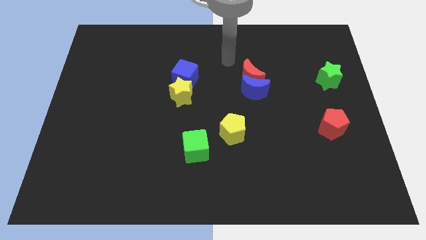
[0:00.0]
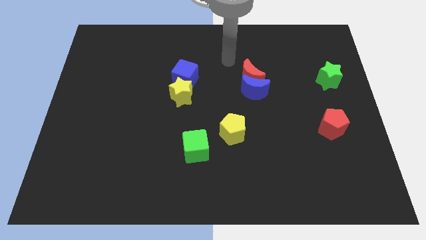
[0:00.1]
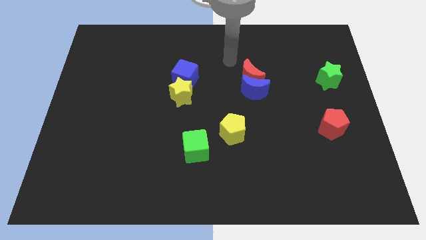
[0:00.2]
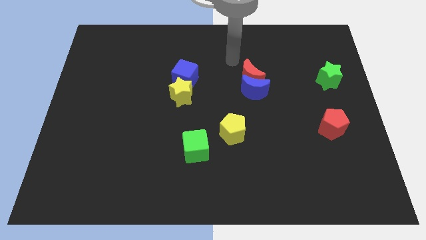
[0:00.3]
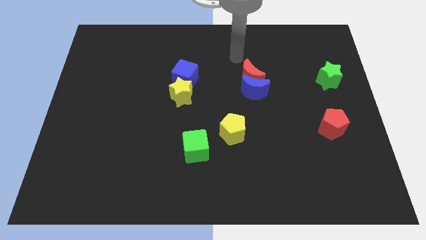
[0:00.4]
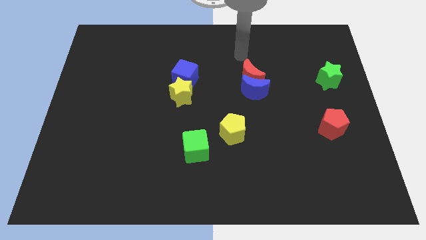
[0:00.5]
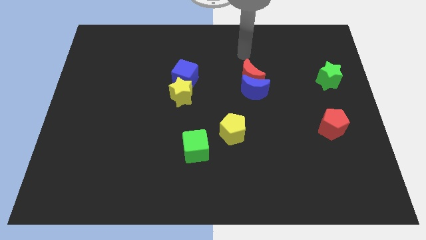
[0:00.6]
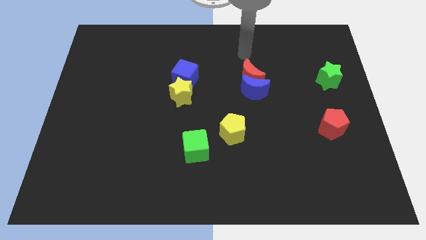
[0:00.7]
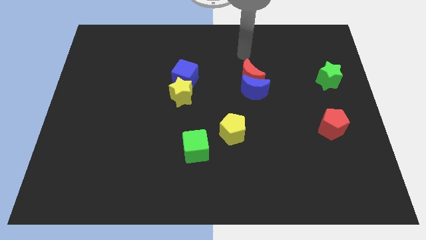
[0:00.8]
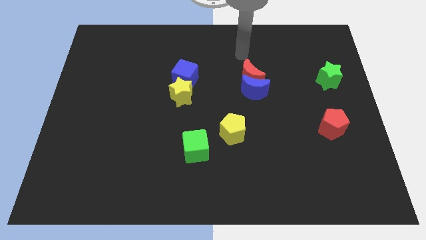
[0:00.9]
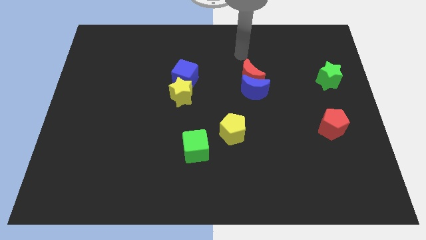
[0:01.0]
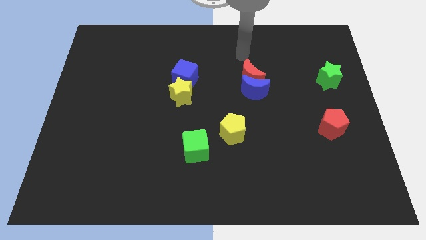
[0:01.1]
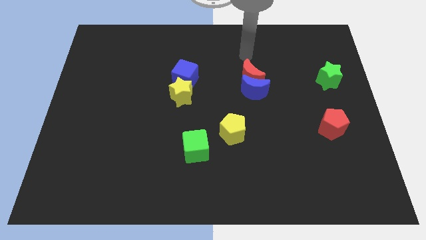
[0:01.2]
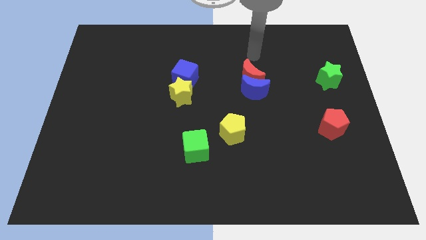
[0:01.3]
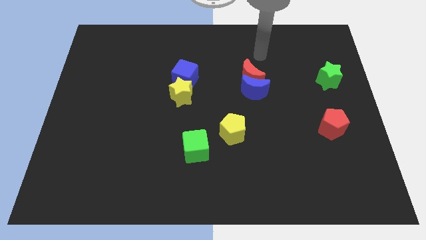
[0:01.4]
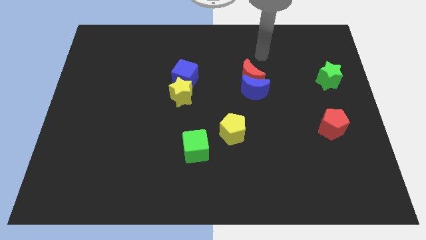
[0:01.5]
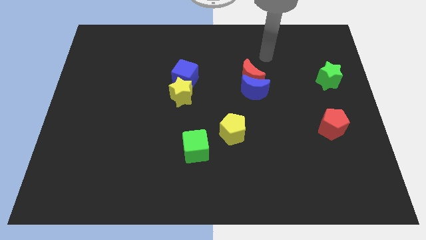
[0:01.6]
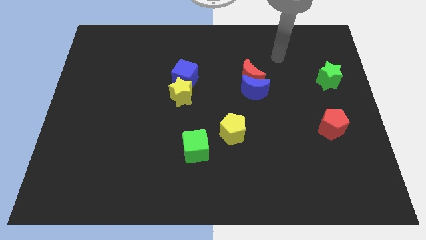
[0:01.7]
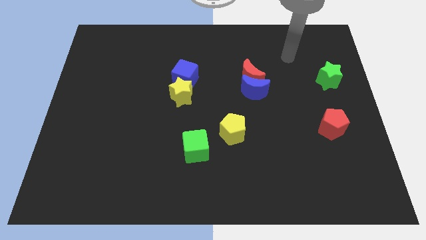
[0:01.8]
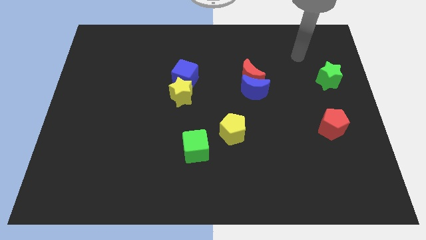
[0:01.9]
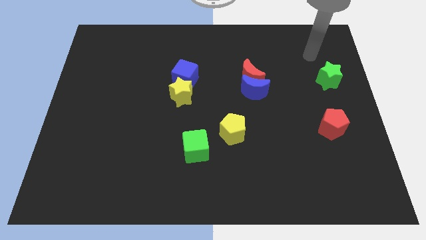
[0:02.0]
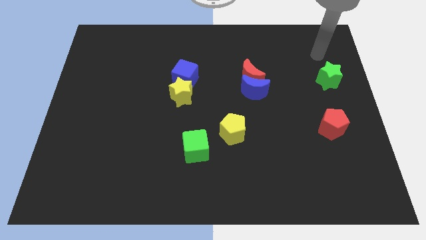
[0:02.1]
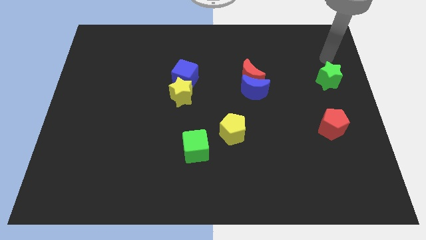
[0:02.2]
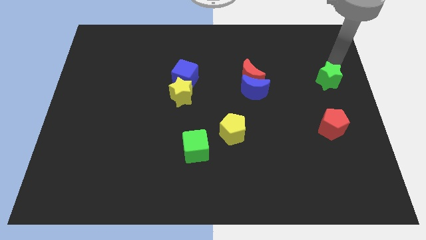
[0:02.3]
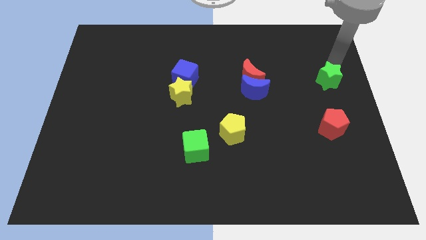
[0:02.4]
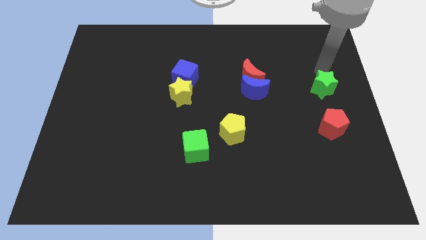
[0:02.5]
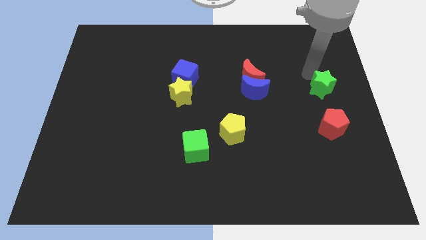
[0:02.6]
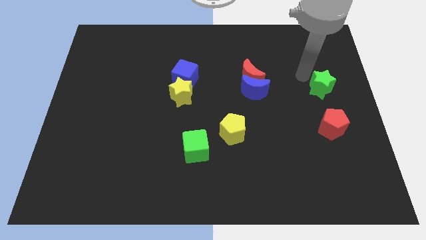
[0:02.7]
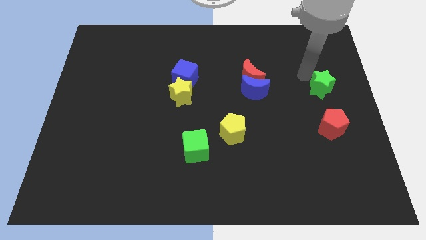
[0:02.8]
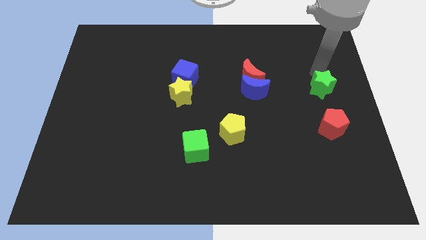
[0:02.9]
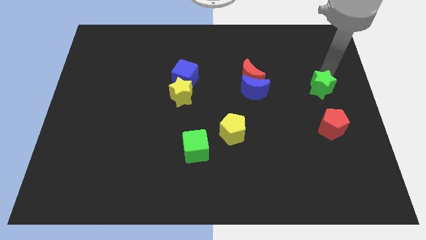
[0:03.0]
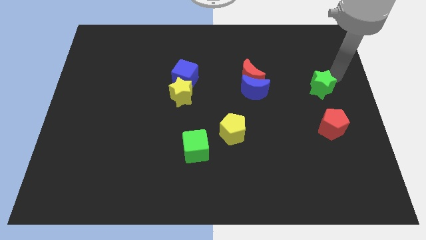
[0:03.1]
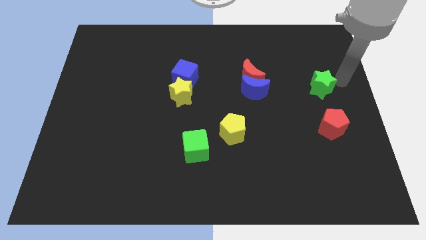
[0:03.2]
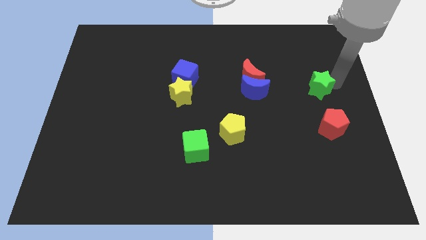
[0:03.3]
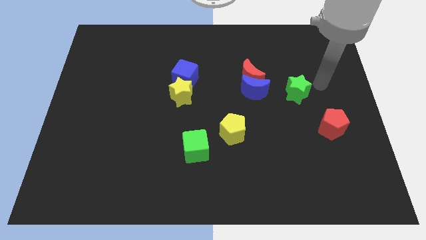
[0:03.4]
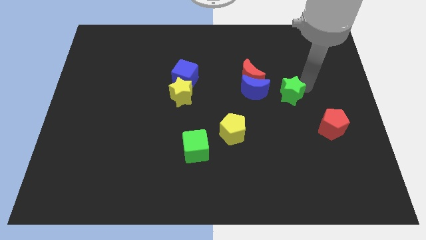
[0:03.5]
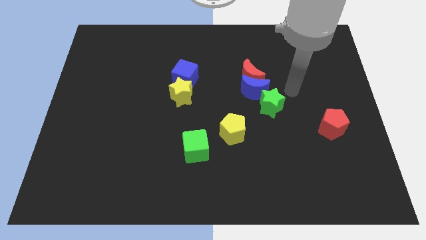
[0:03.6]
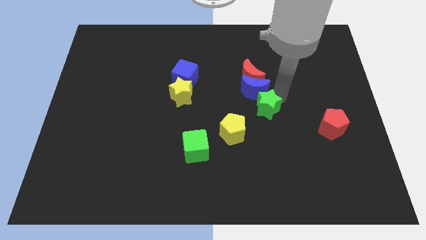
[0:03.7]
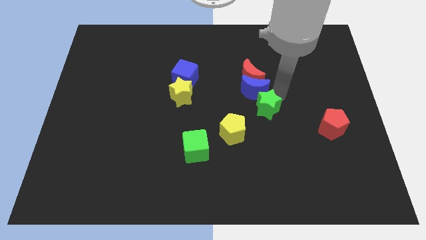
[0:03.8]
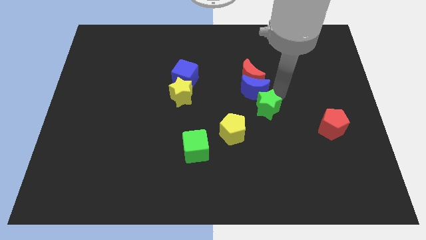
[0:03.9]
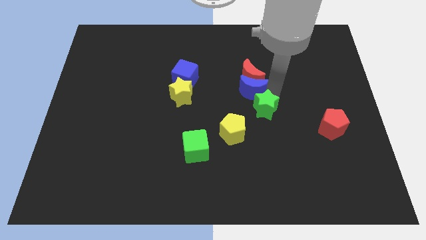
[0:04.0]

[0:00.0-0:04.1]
move the green star to the bottom right of the blue crescent

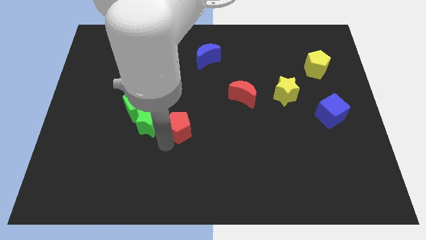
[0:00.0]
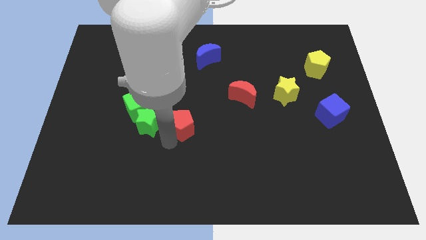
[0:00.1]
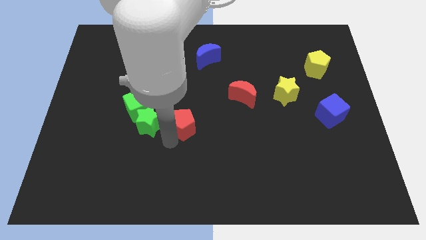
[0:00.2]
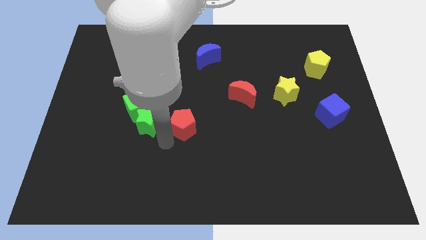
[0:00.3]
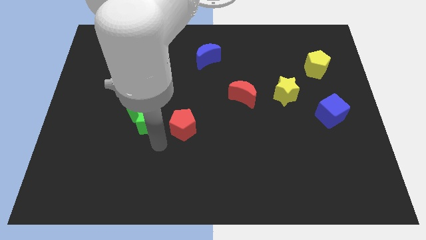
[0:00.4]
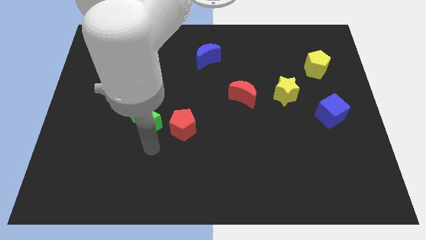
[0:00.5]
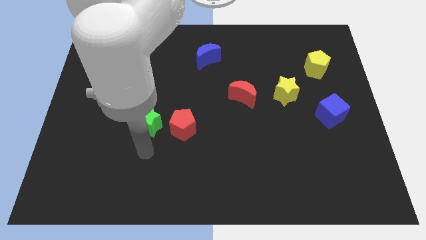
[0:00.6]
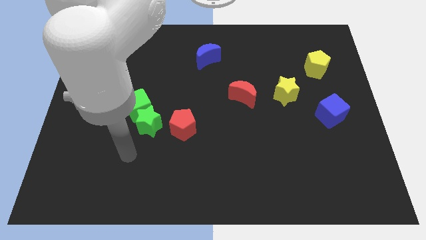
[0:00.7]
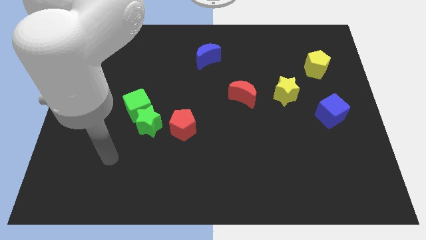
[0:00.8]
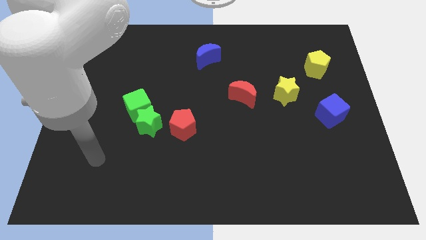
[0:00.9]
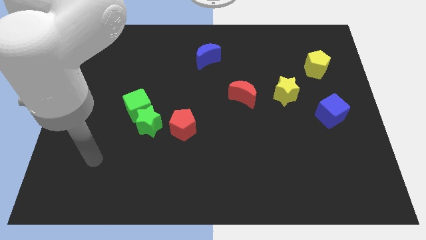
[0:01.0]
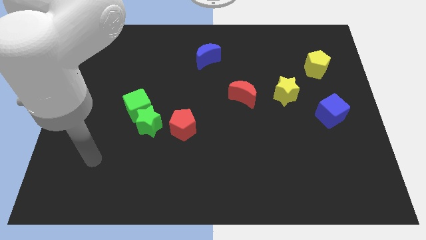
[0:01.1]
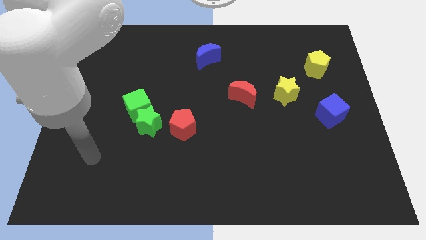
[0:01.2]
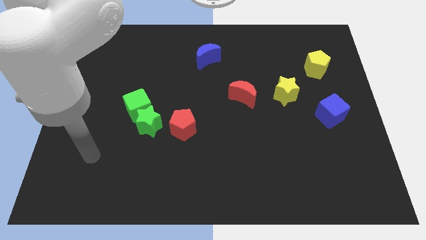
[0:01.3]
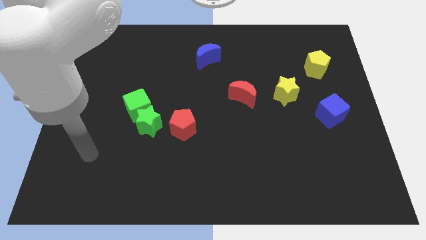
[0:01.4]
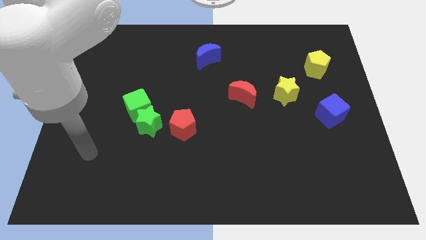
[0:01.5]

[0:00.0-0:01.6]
put the red pentagon right to the green star

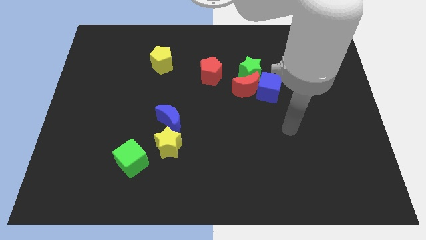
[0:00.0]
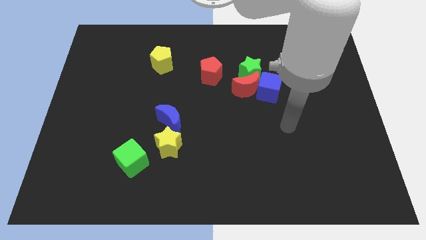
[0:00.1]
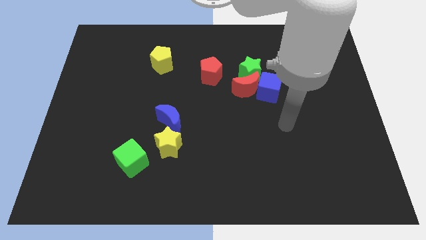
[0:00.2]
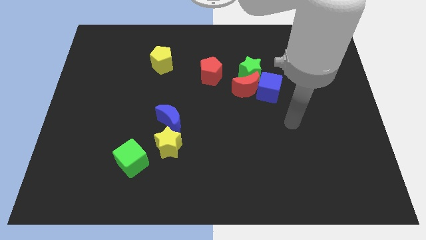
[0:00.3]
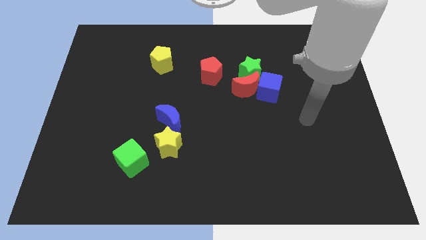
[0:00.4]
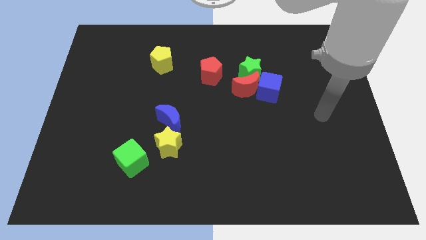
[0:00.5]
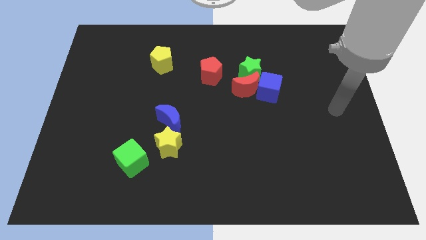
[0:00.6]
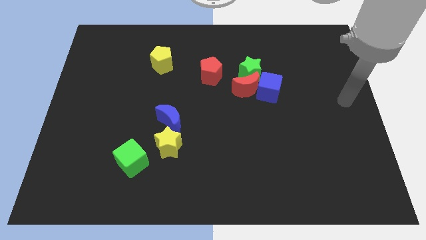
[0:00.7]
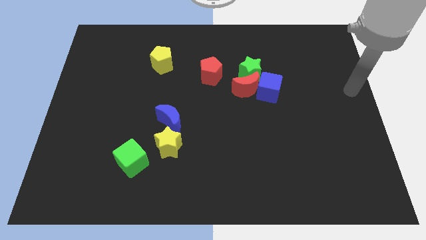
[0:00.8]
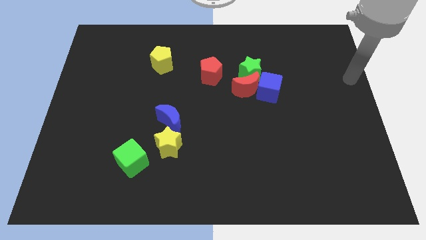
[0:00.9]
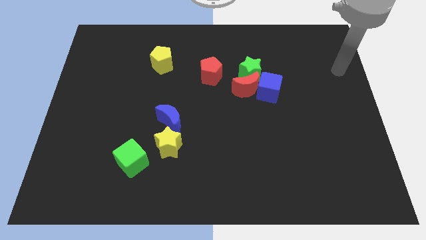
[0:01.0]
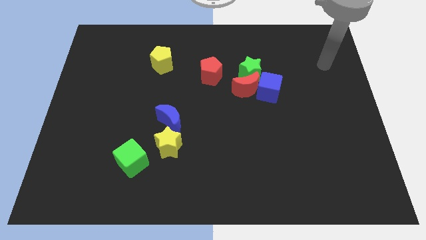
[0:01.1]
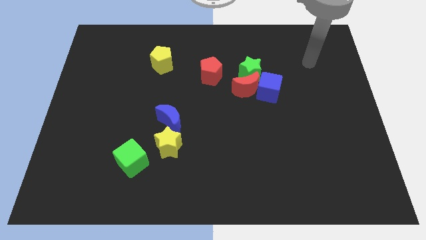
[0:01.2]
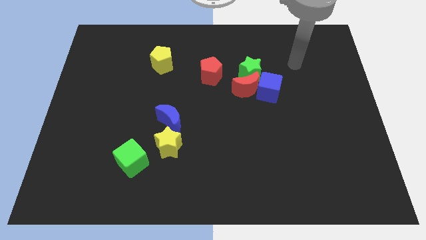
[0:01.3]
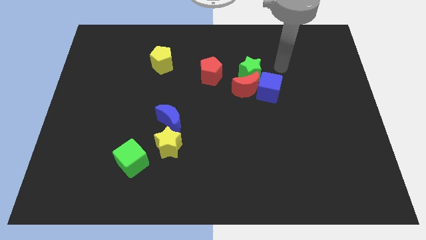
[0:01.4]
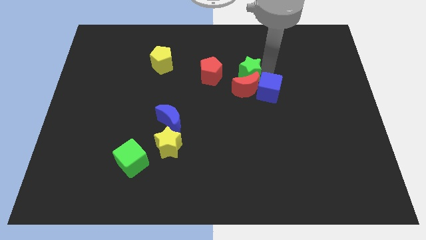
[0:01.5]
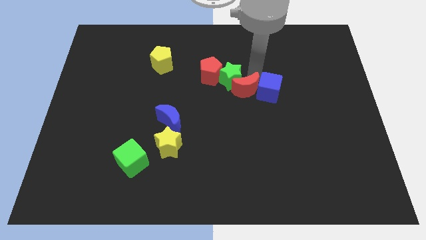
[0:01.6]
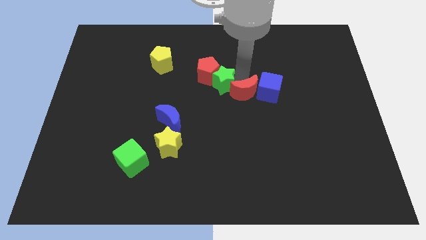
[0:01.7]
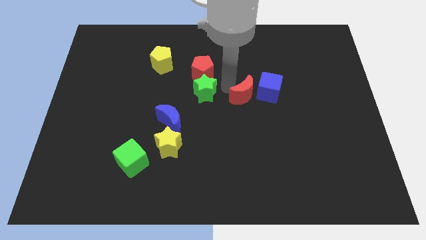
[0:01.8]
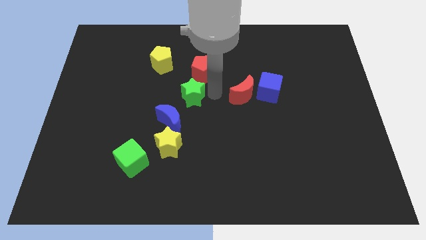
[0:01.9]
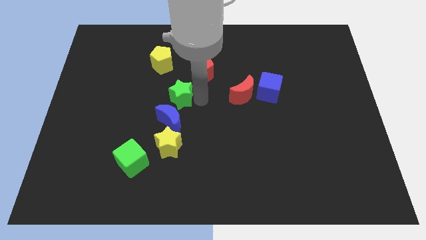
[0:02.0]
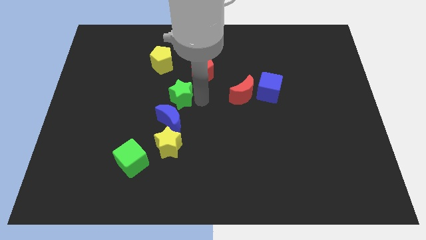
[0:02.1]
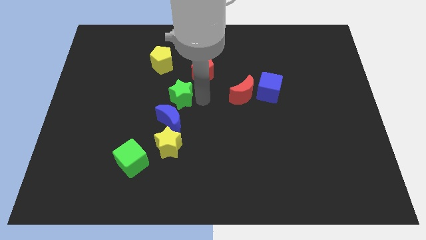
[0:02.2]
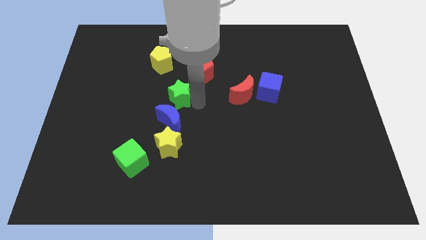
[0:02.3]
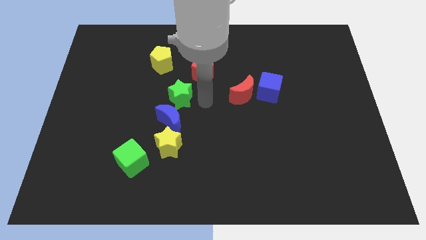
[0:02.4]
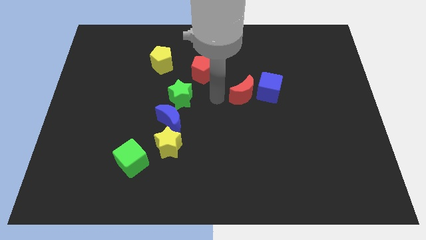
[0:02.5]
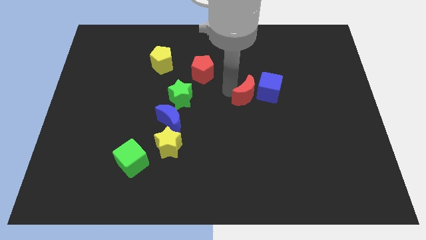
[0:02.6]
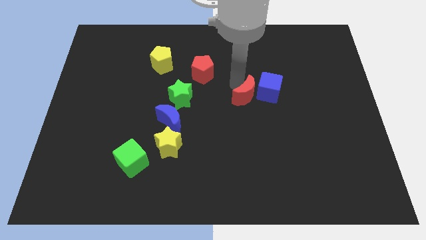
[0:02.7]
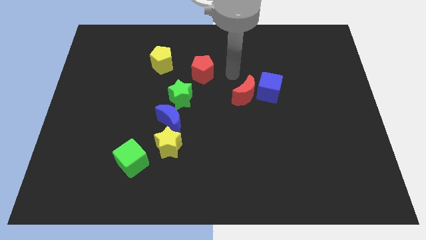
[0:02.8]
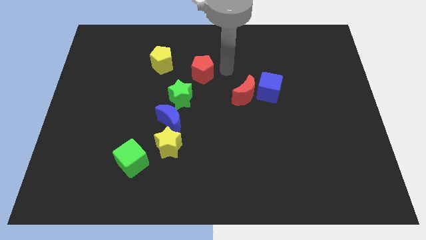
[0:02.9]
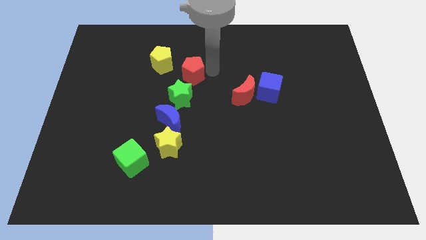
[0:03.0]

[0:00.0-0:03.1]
place the green star and red pentagon diagonally above the top right side of the blue crescent

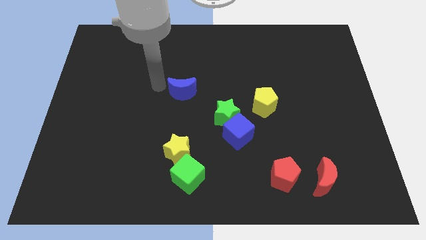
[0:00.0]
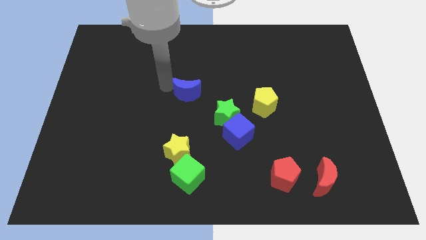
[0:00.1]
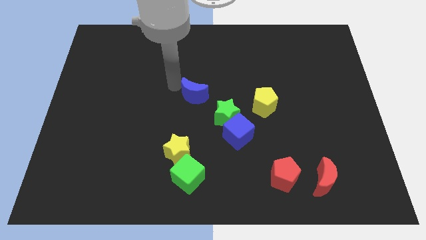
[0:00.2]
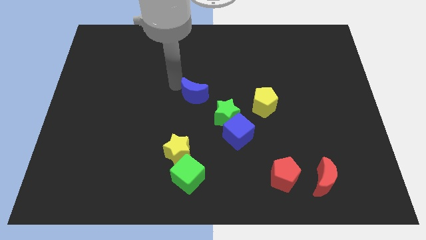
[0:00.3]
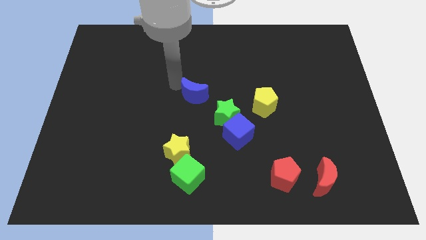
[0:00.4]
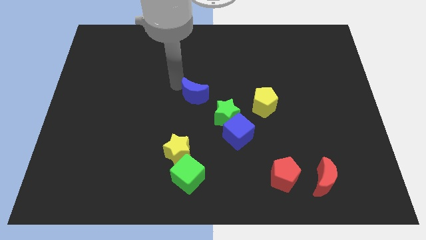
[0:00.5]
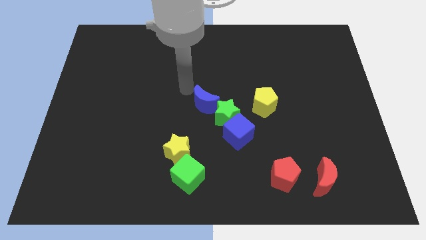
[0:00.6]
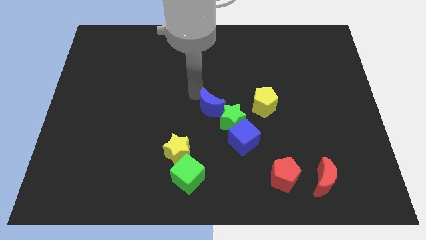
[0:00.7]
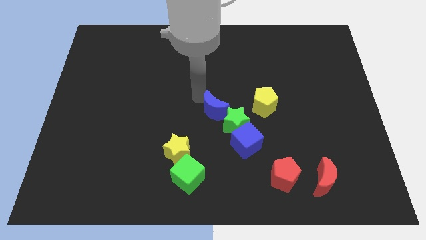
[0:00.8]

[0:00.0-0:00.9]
push the blue crescent into the green star
